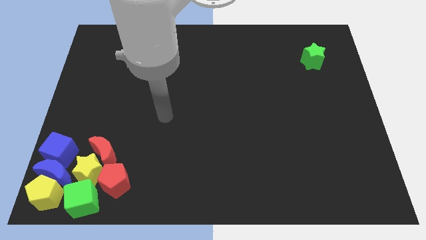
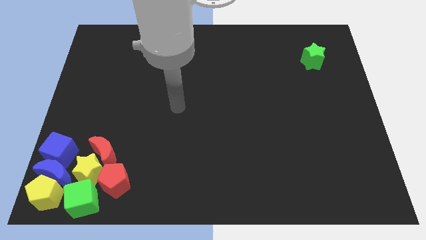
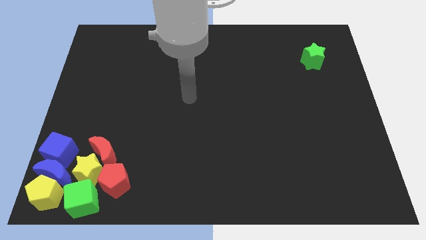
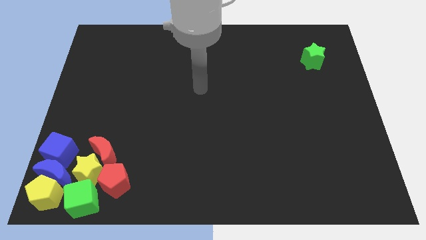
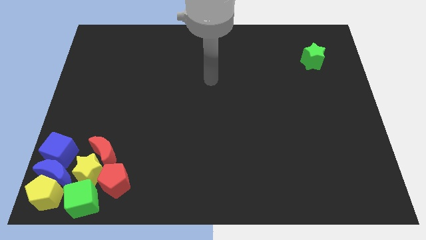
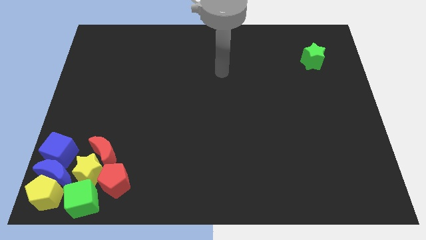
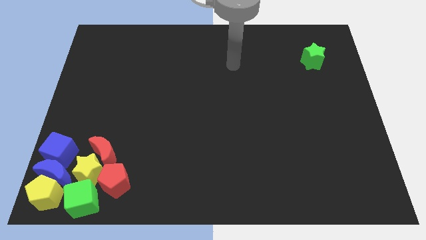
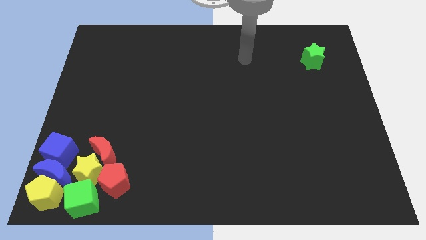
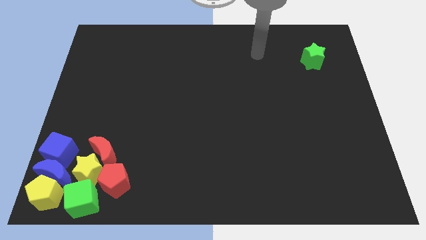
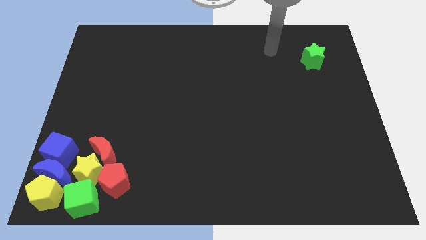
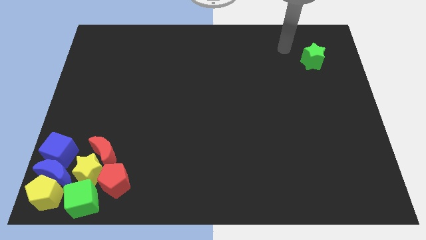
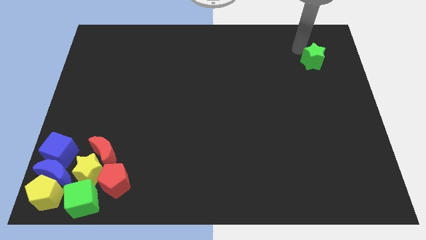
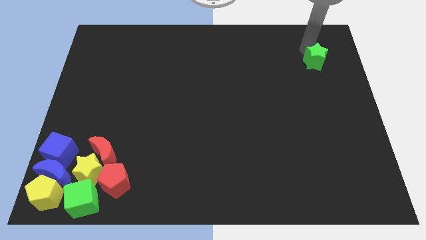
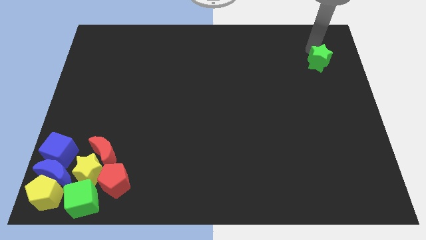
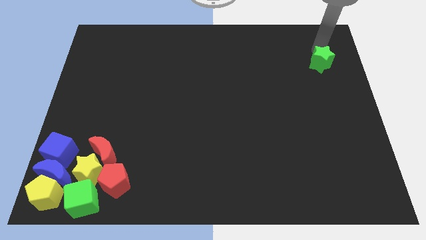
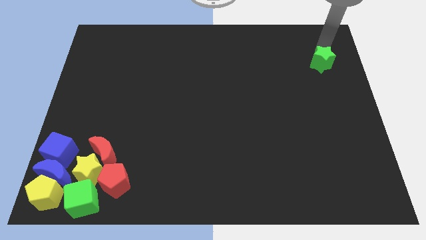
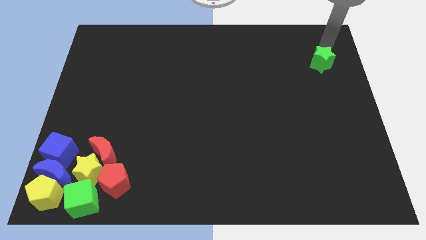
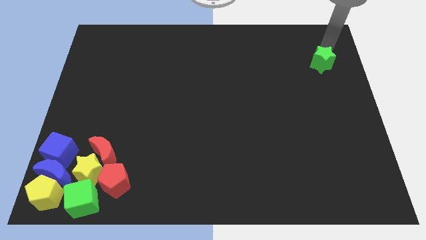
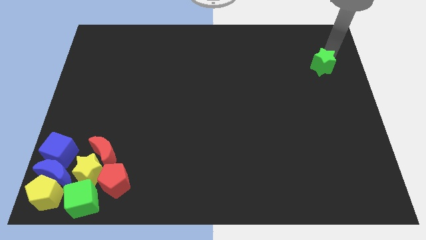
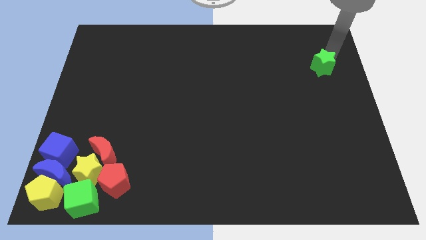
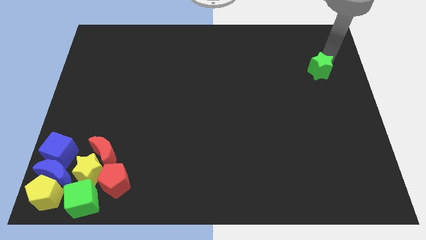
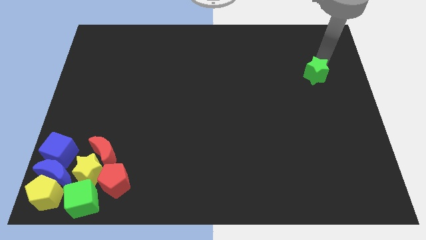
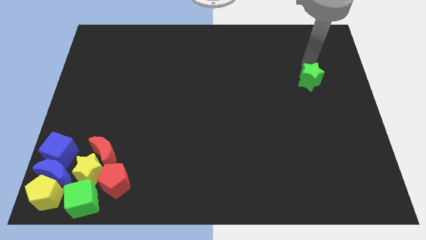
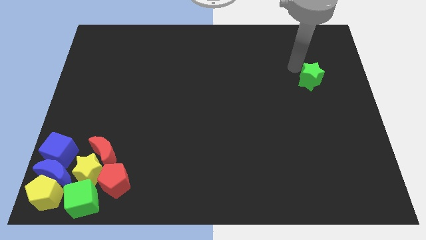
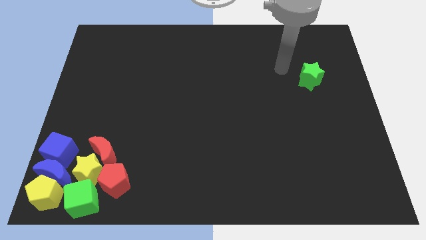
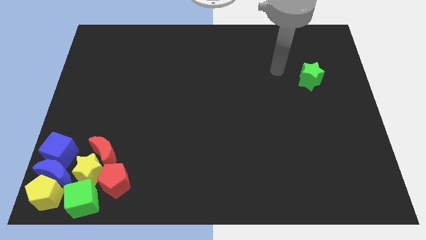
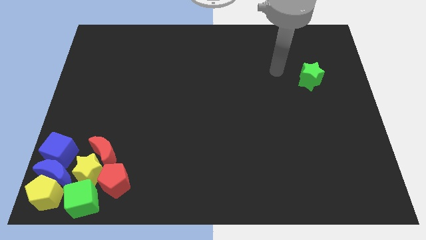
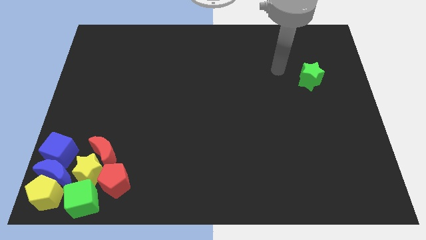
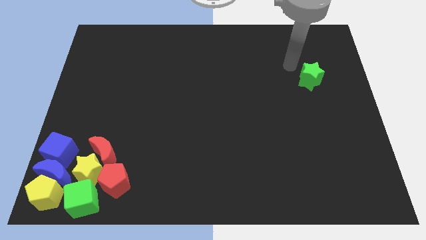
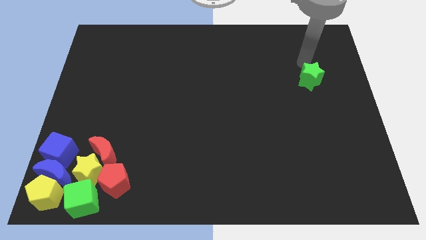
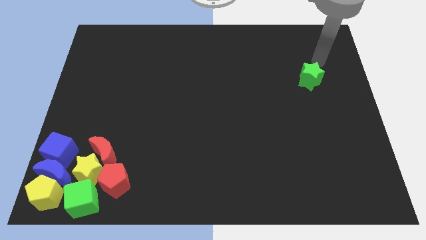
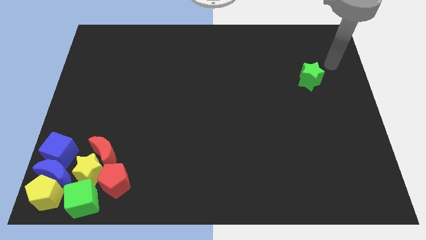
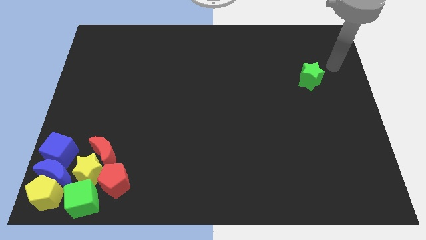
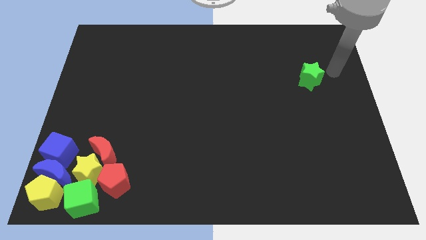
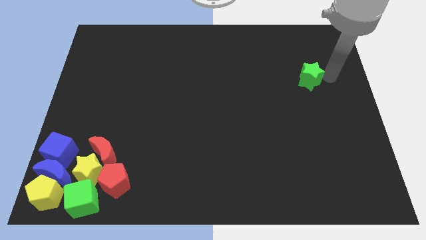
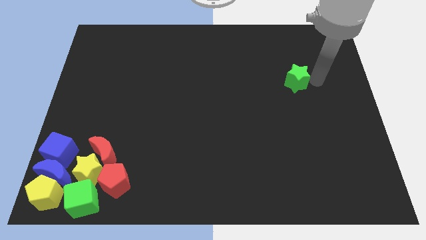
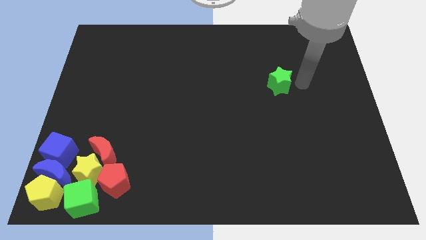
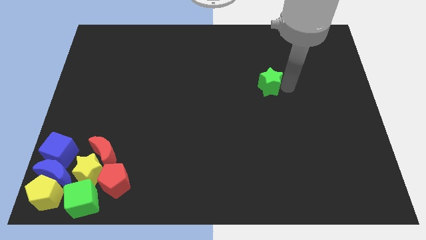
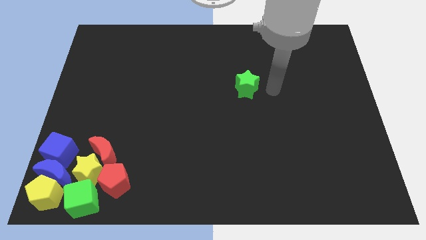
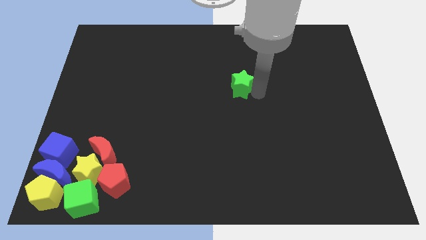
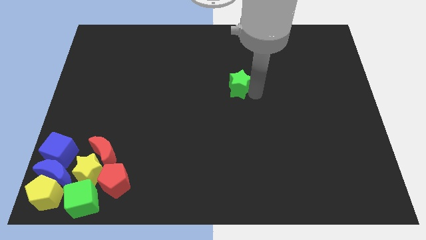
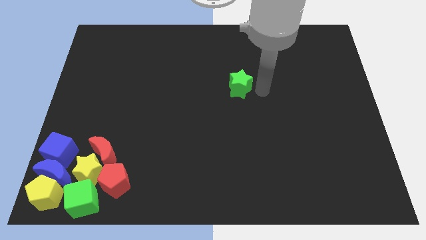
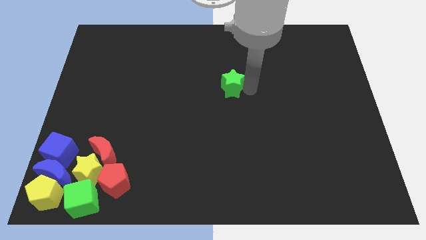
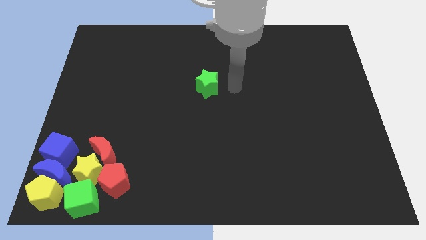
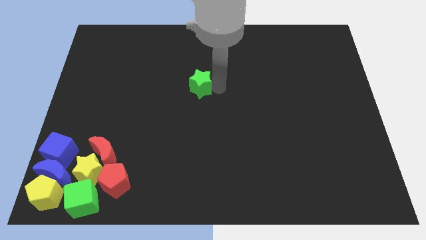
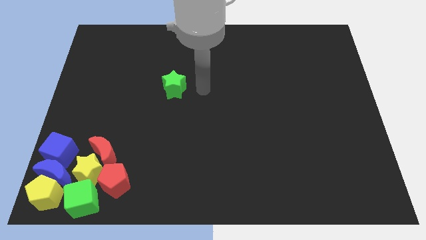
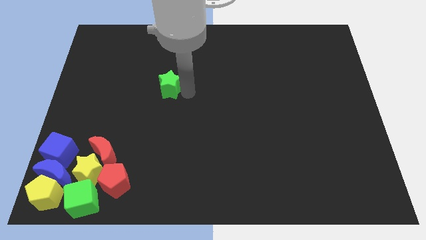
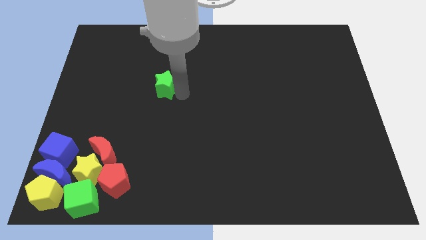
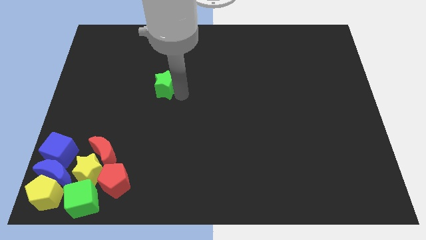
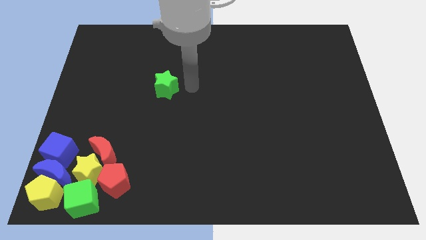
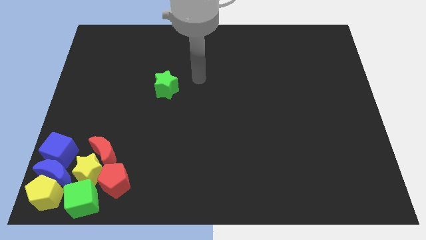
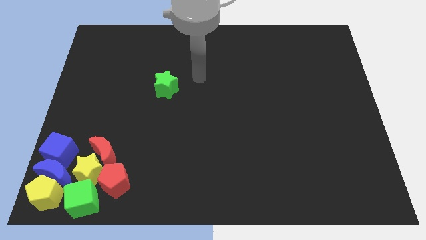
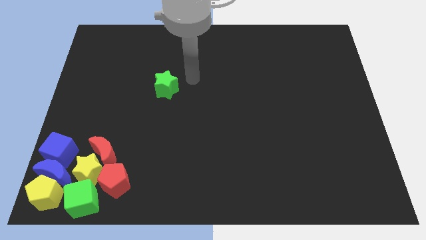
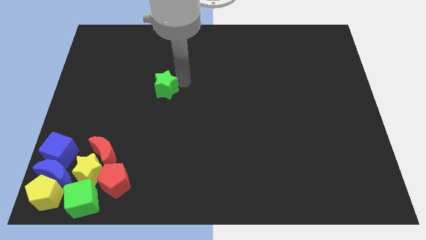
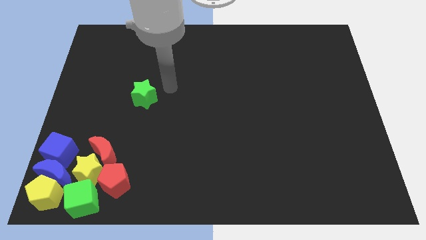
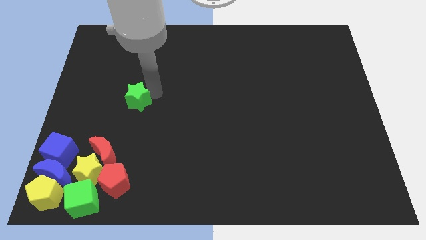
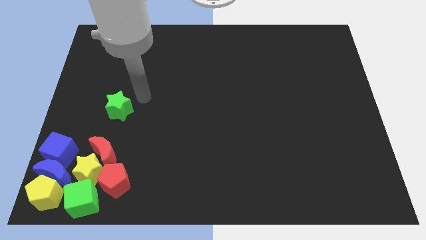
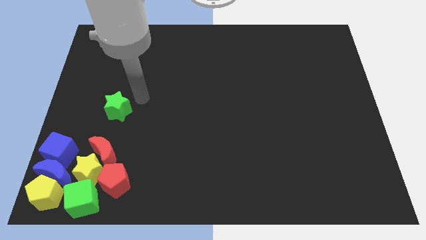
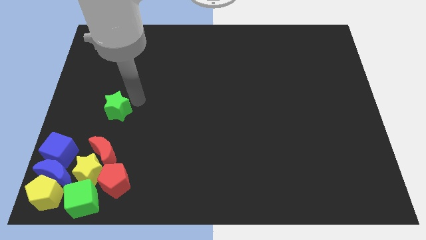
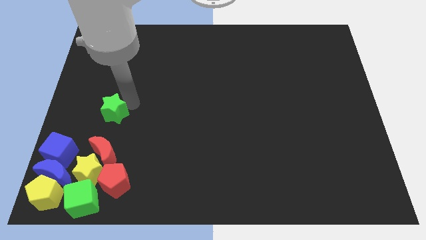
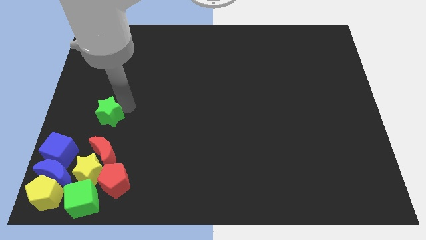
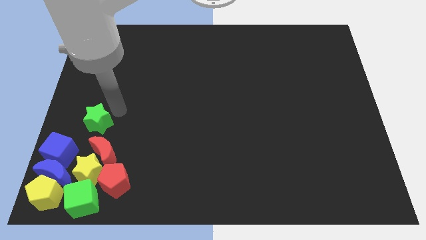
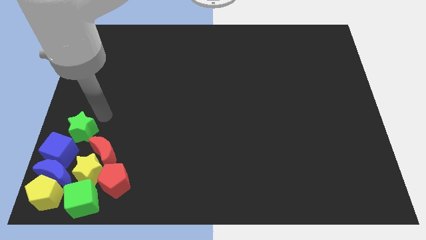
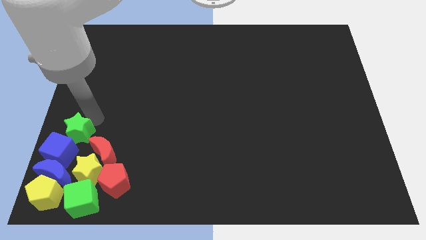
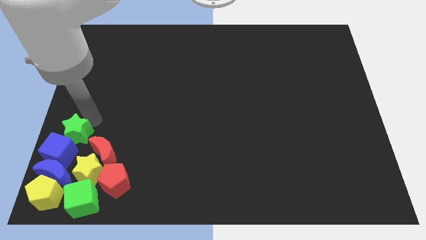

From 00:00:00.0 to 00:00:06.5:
drag green star into blue cube

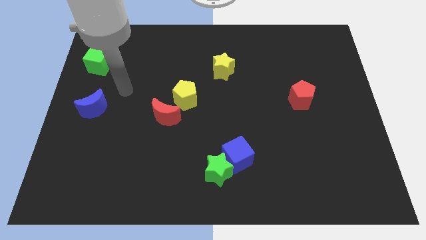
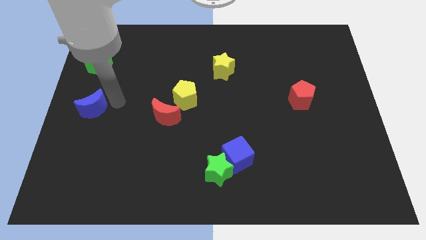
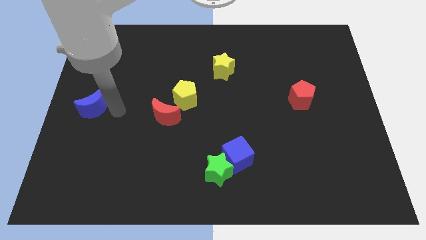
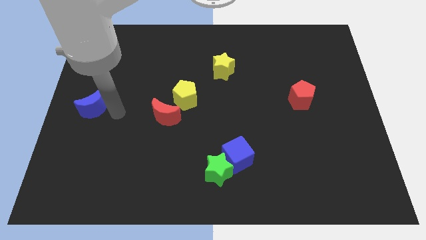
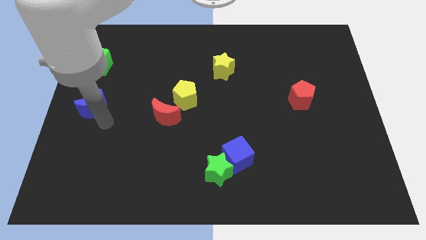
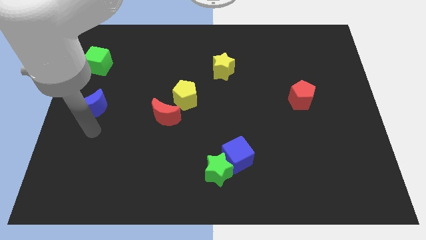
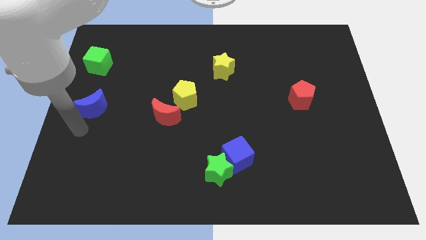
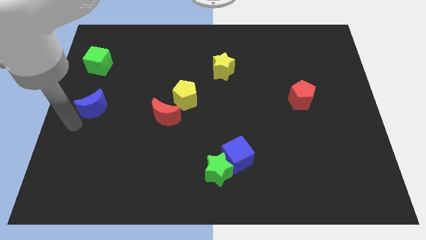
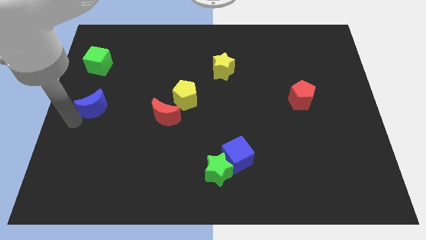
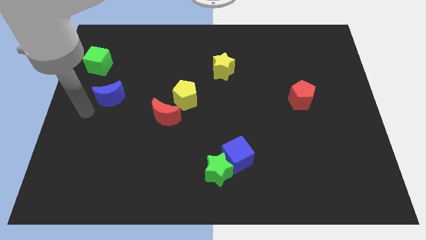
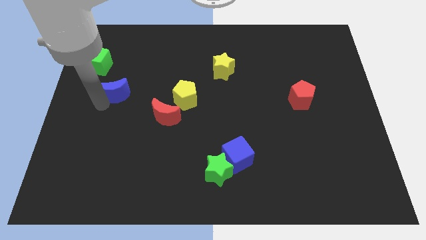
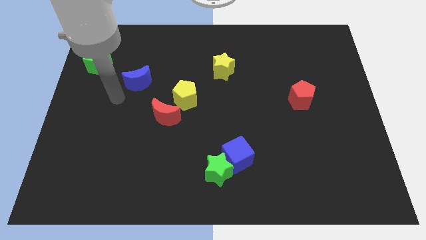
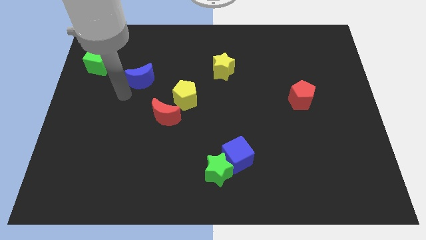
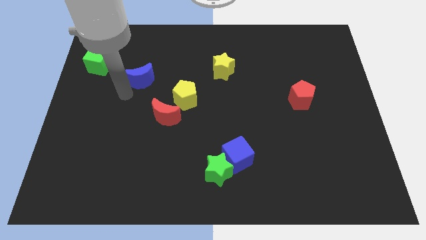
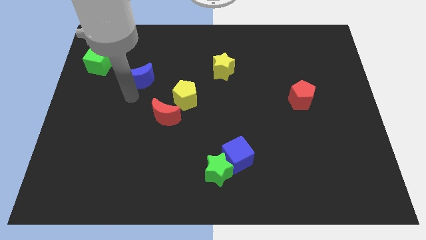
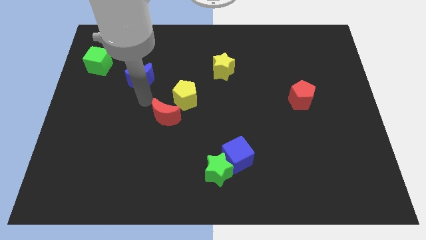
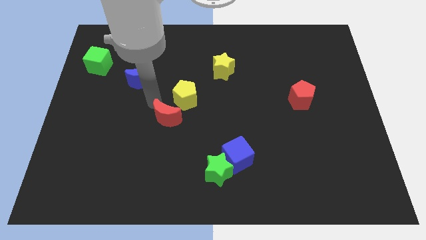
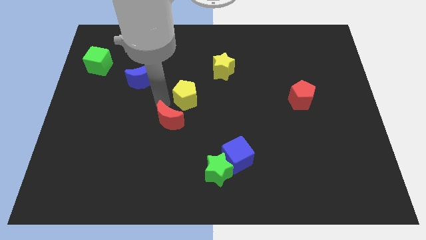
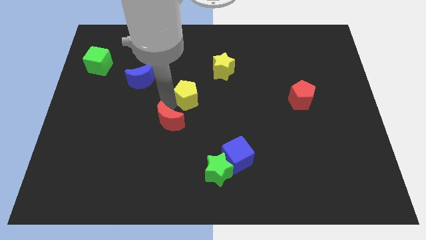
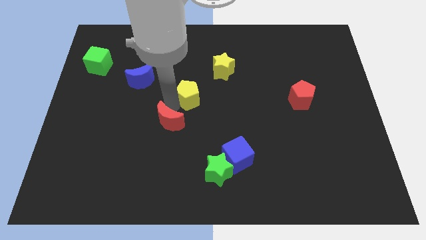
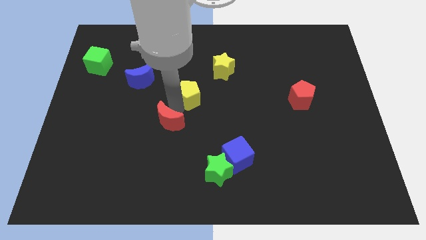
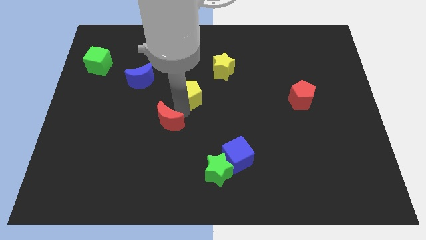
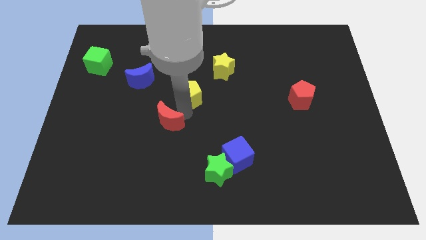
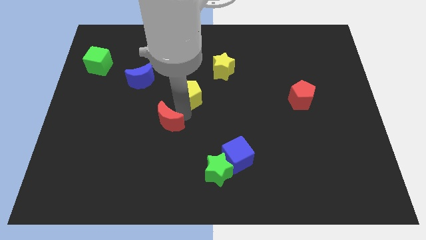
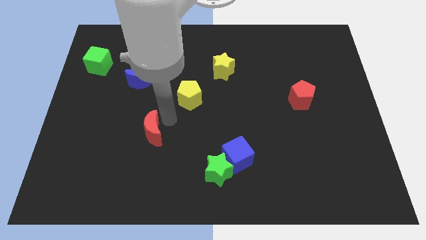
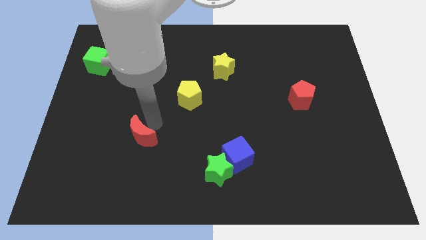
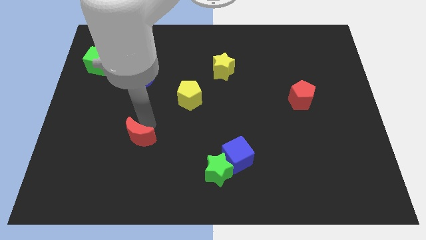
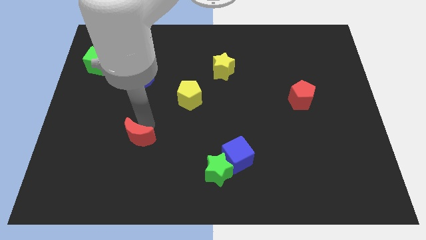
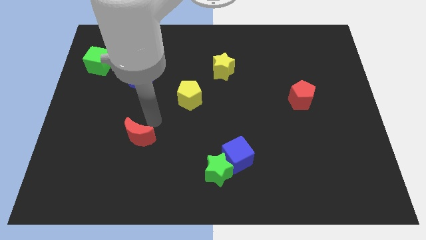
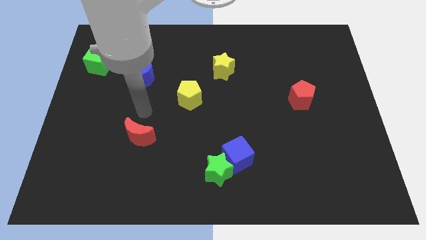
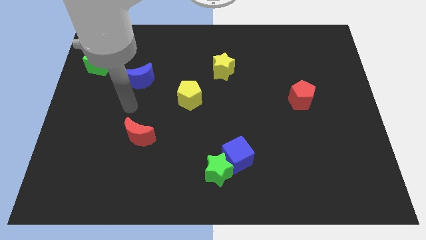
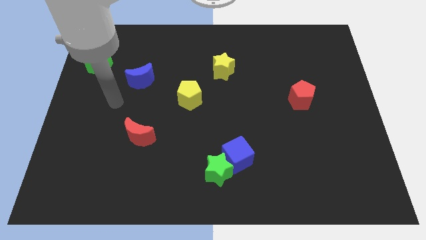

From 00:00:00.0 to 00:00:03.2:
push the red moon diagonal to the yellow pentagon
